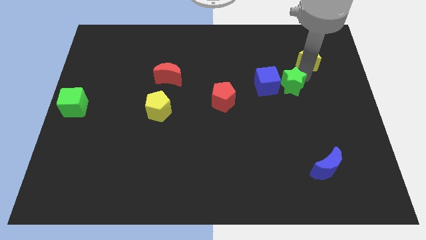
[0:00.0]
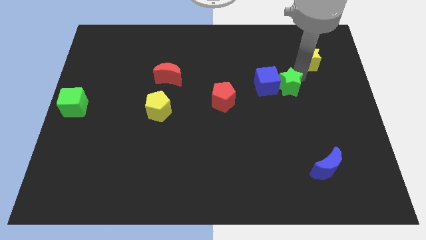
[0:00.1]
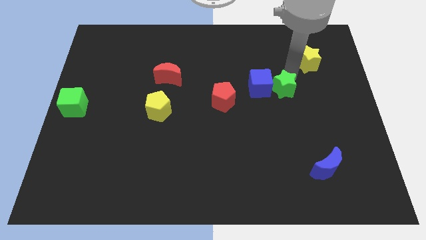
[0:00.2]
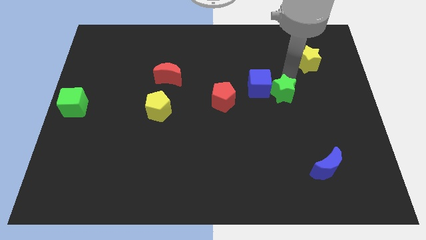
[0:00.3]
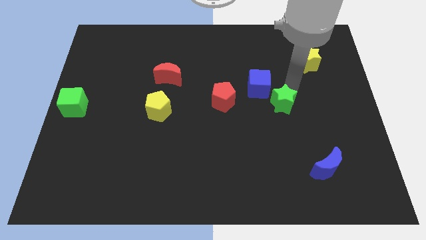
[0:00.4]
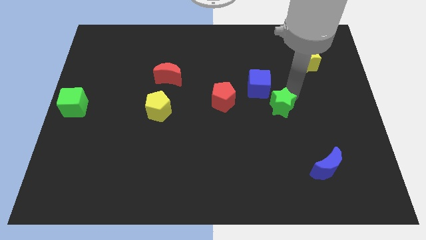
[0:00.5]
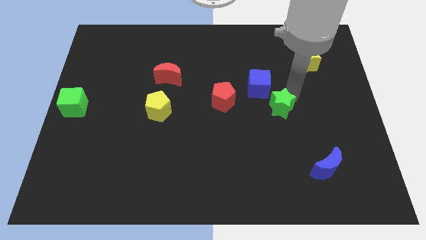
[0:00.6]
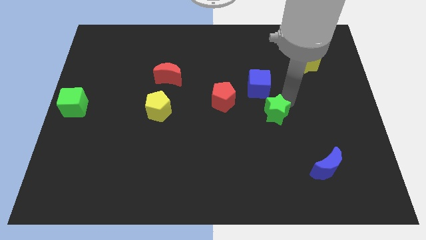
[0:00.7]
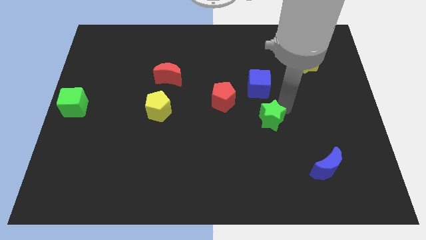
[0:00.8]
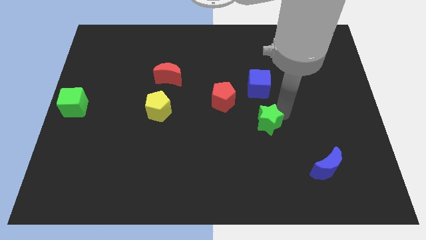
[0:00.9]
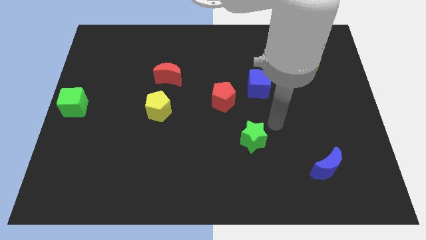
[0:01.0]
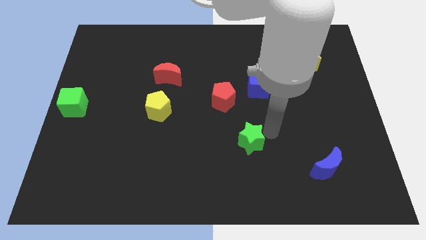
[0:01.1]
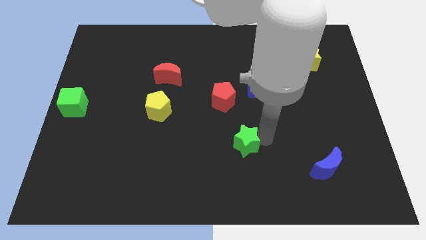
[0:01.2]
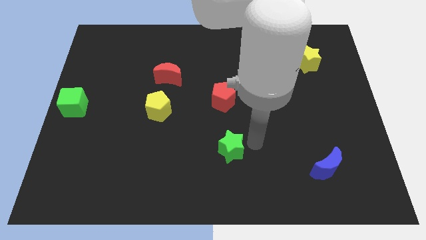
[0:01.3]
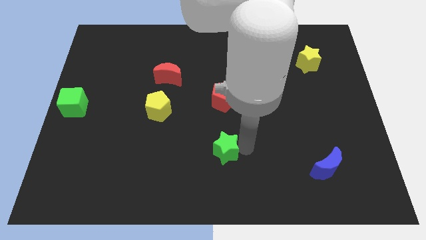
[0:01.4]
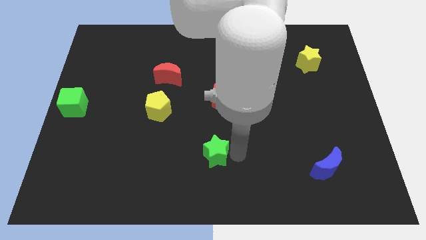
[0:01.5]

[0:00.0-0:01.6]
place the green star below the red pentagon

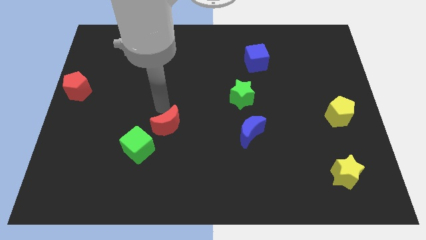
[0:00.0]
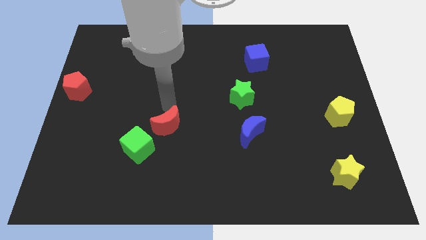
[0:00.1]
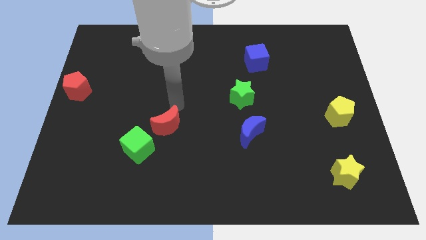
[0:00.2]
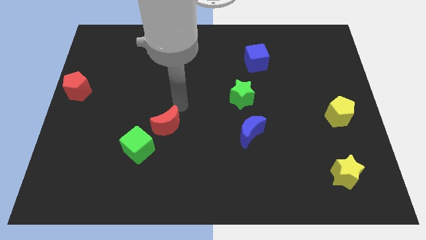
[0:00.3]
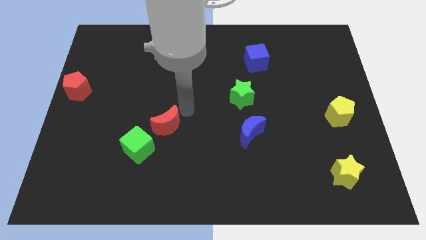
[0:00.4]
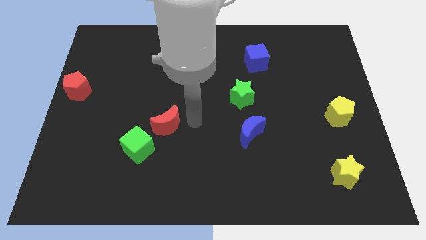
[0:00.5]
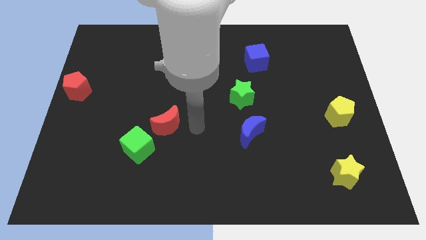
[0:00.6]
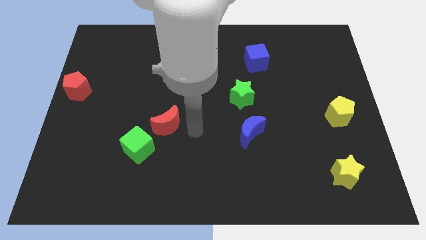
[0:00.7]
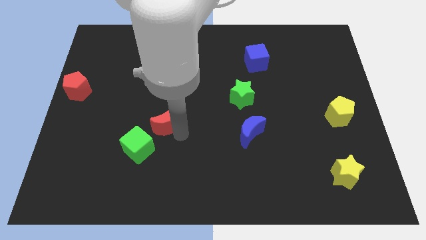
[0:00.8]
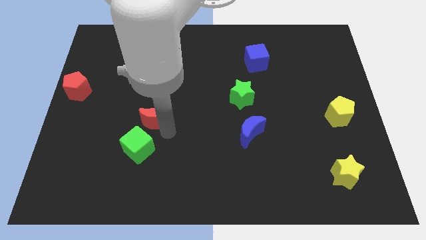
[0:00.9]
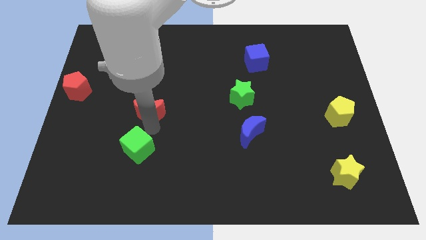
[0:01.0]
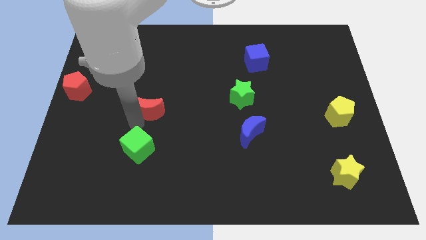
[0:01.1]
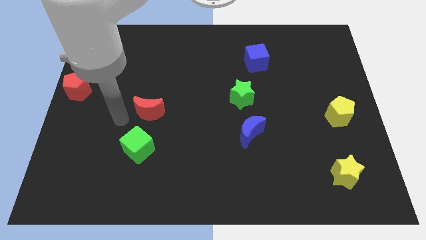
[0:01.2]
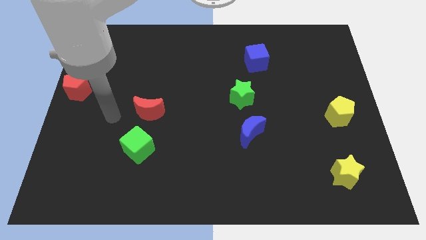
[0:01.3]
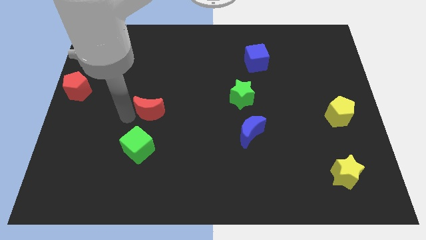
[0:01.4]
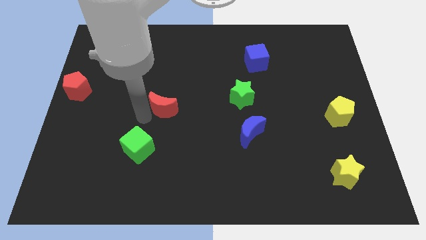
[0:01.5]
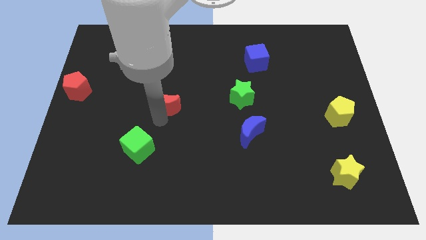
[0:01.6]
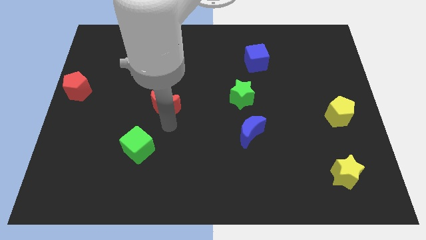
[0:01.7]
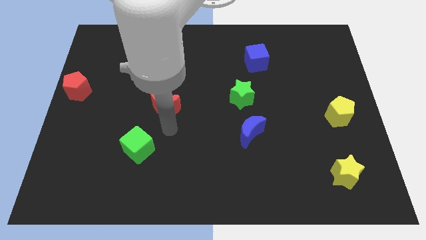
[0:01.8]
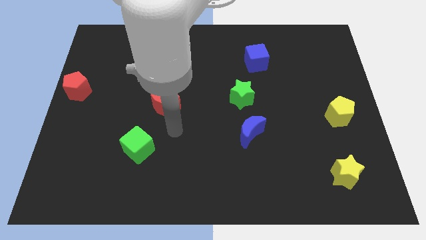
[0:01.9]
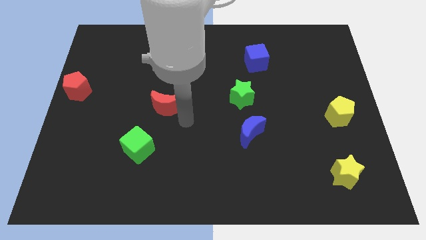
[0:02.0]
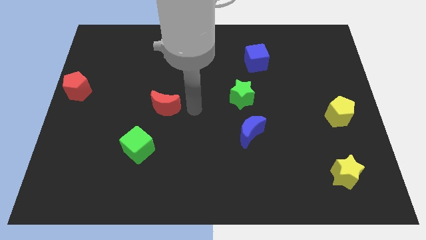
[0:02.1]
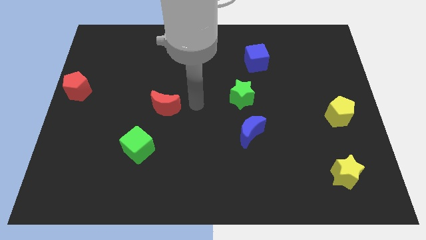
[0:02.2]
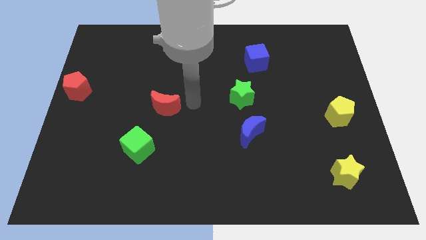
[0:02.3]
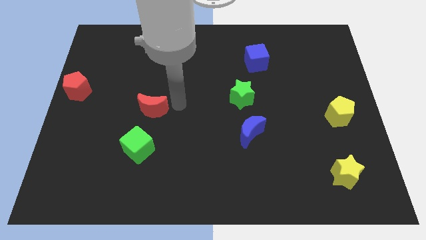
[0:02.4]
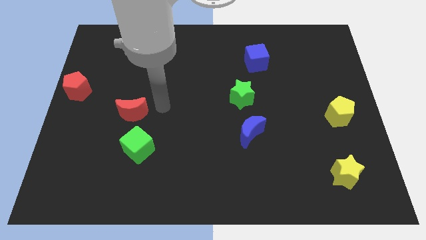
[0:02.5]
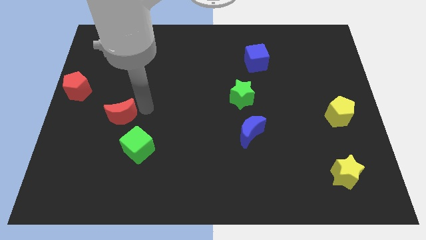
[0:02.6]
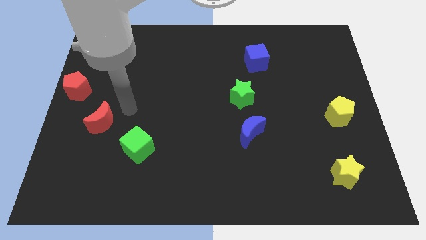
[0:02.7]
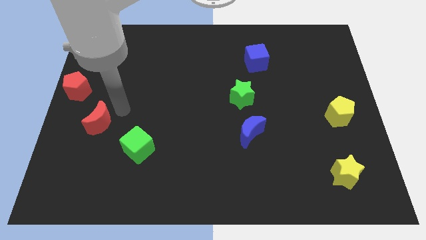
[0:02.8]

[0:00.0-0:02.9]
place the red moon between green cube and red pentagon

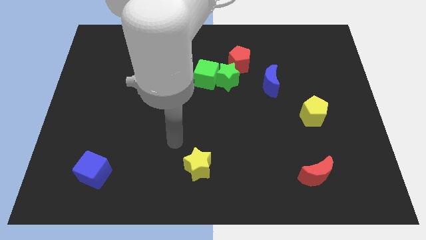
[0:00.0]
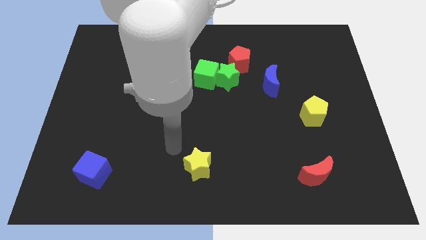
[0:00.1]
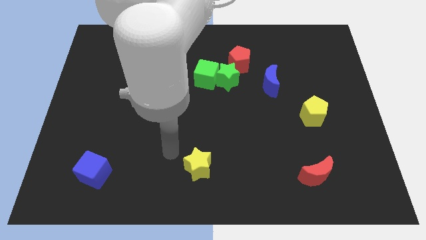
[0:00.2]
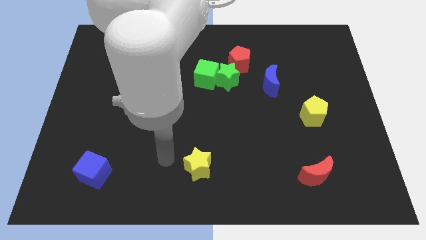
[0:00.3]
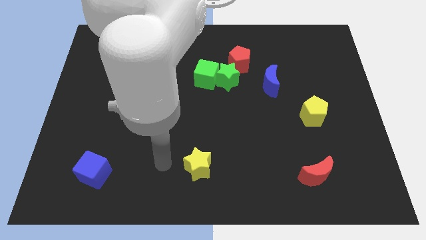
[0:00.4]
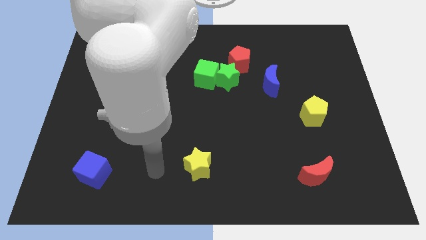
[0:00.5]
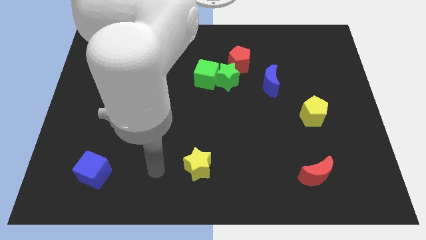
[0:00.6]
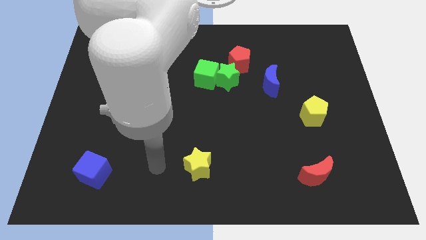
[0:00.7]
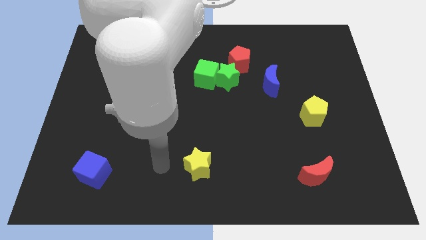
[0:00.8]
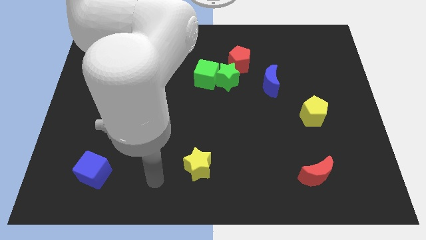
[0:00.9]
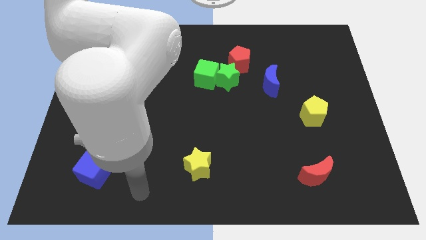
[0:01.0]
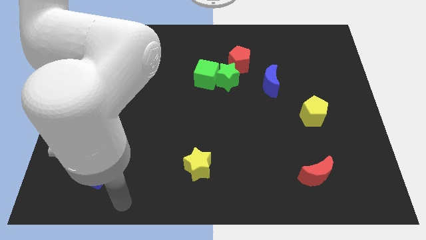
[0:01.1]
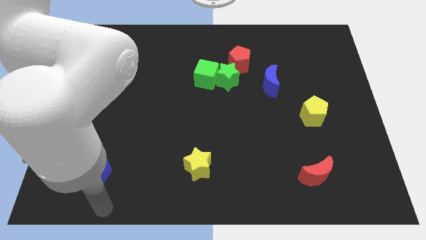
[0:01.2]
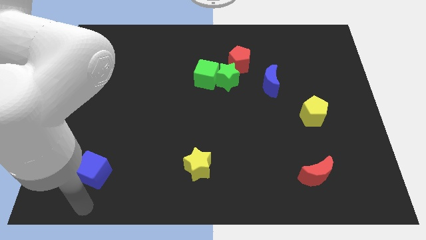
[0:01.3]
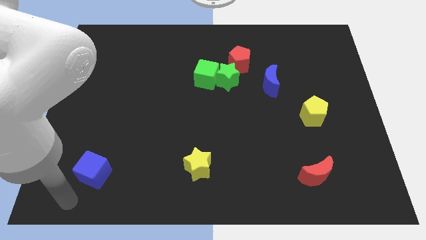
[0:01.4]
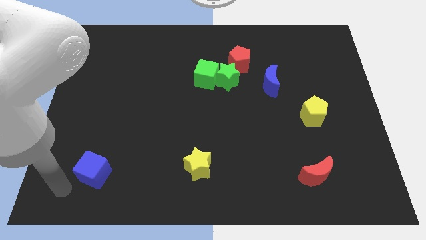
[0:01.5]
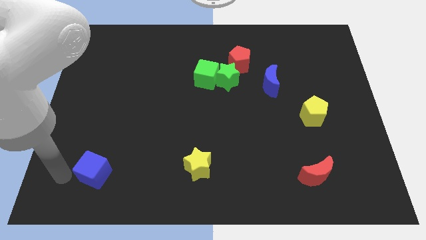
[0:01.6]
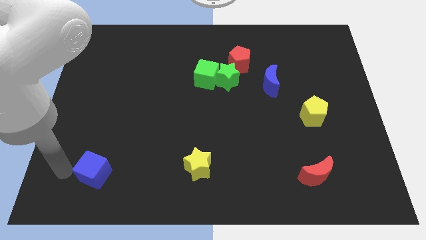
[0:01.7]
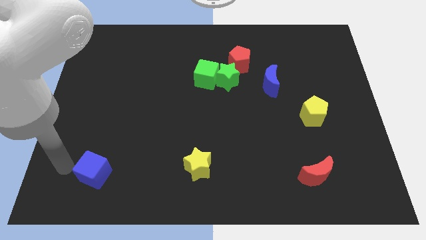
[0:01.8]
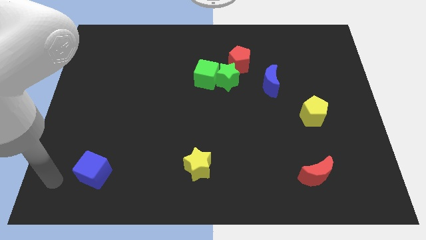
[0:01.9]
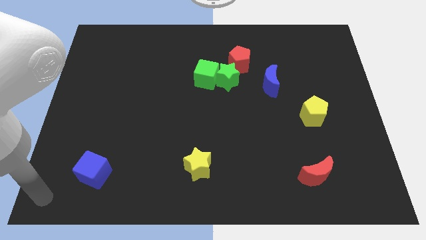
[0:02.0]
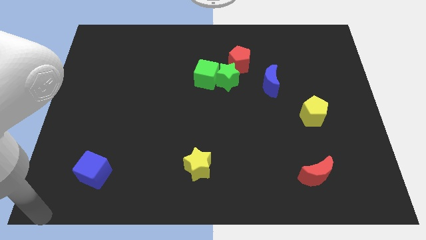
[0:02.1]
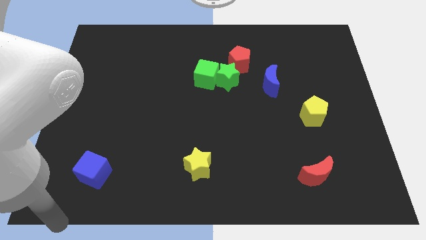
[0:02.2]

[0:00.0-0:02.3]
put arm at the bottom of blue cube

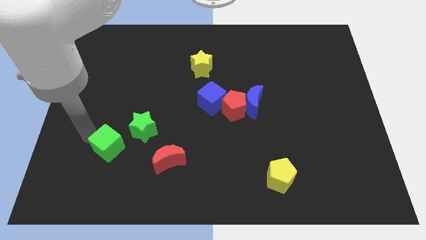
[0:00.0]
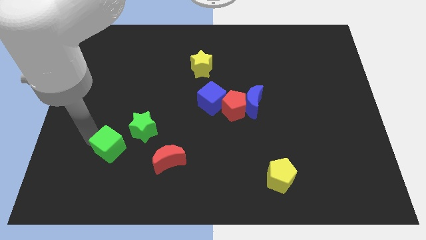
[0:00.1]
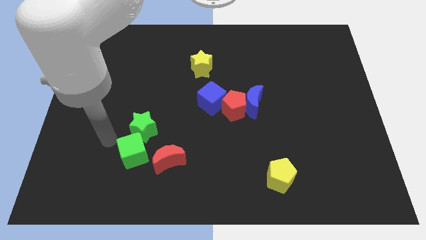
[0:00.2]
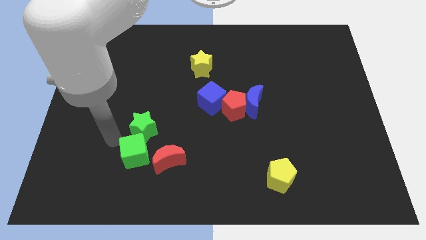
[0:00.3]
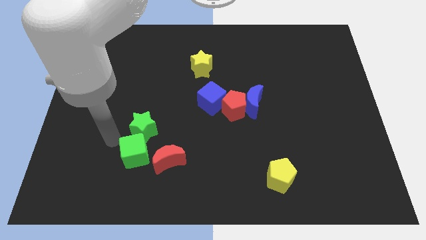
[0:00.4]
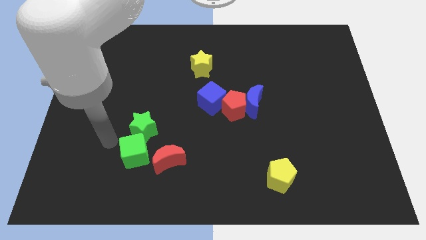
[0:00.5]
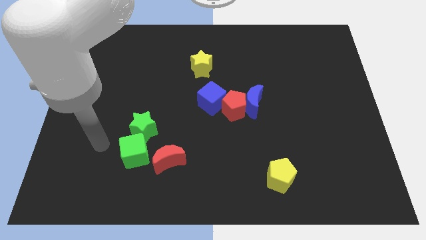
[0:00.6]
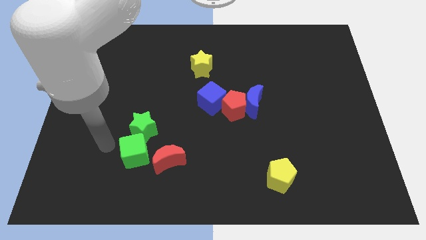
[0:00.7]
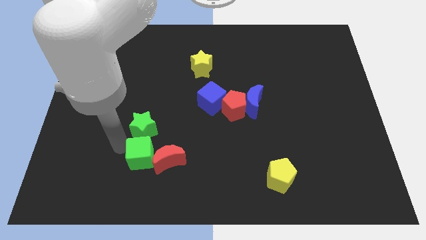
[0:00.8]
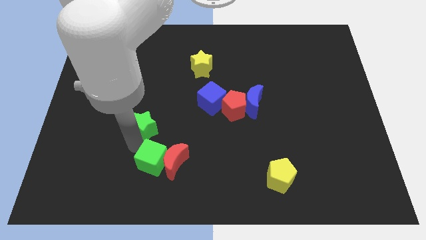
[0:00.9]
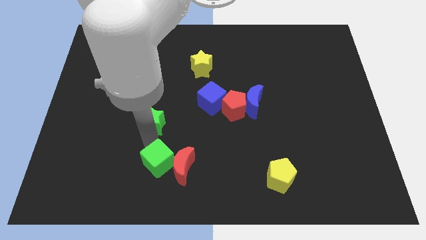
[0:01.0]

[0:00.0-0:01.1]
slide green cube to red moon

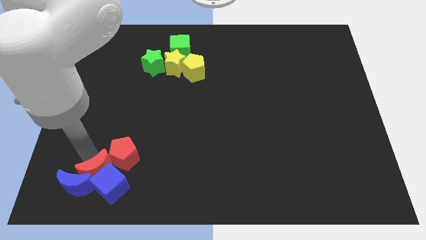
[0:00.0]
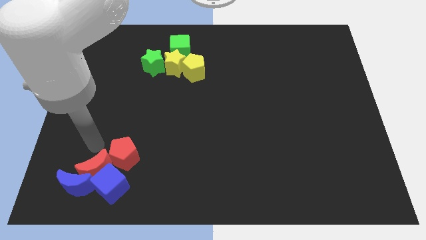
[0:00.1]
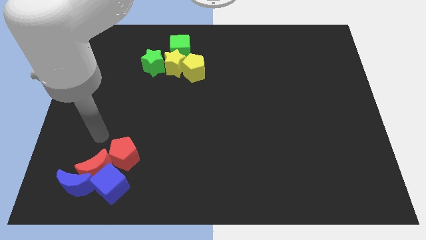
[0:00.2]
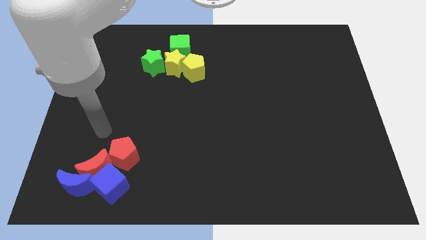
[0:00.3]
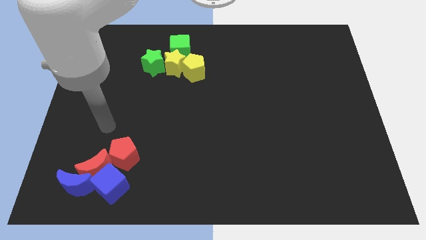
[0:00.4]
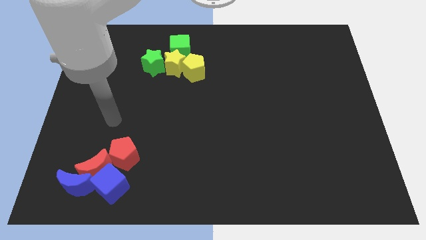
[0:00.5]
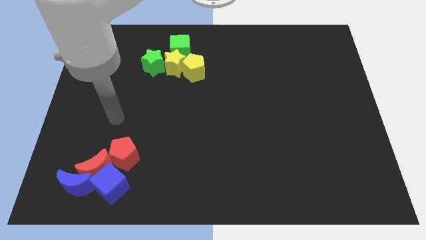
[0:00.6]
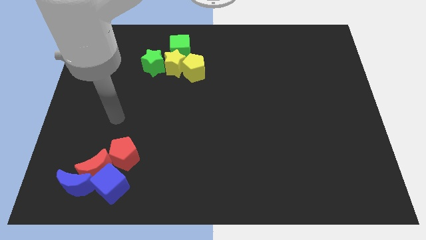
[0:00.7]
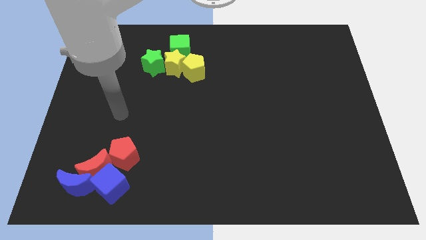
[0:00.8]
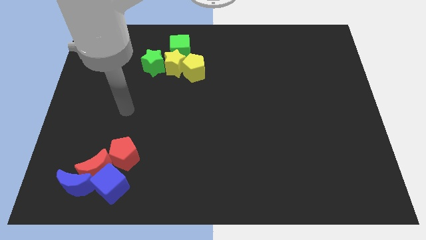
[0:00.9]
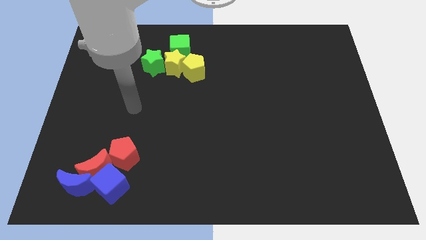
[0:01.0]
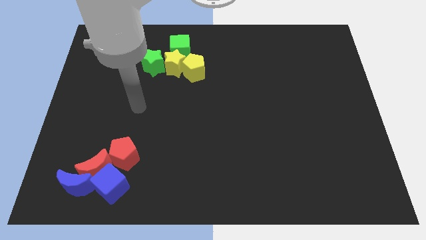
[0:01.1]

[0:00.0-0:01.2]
move your arm towards the top side of the board

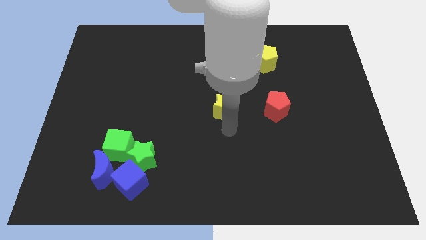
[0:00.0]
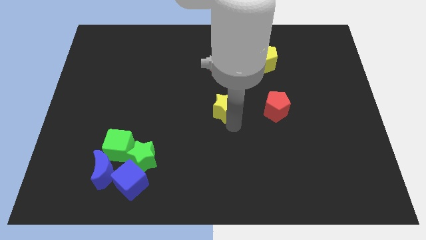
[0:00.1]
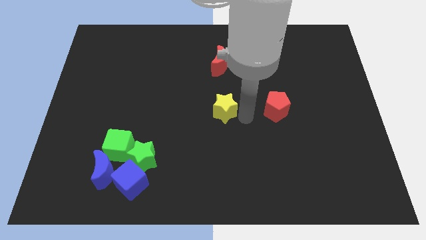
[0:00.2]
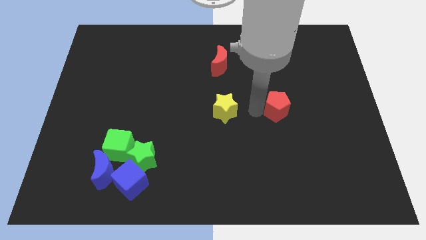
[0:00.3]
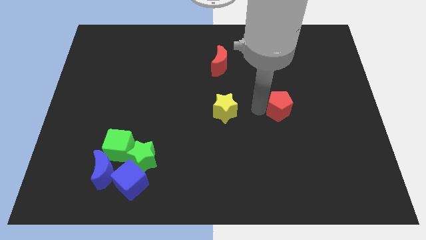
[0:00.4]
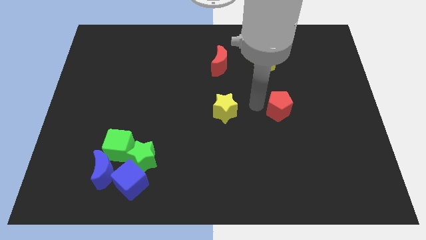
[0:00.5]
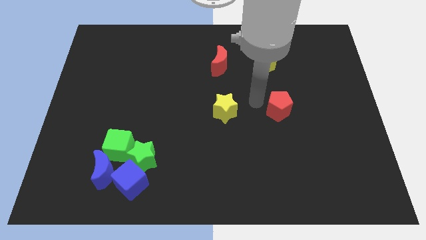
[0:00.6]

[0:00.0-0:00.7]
touch the red pentagon
